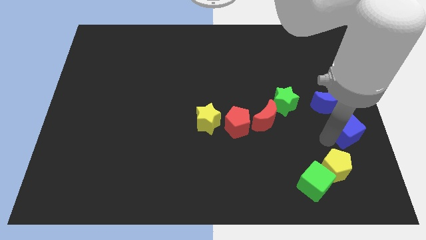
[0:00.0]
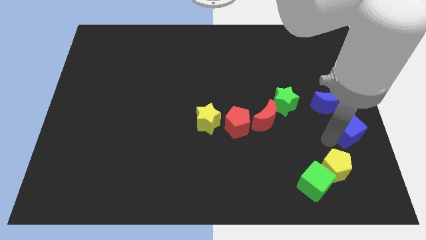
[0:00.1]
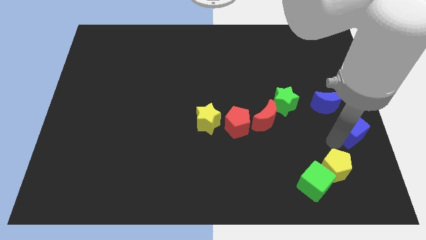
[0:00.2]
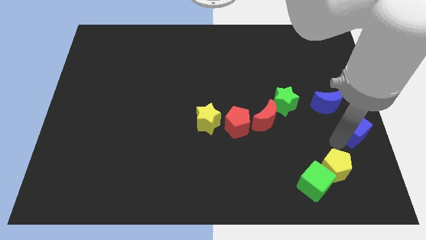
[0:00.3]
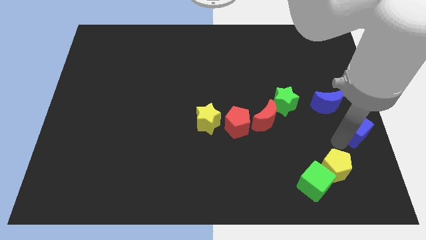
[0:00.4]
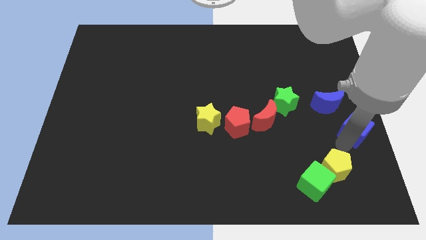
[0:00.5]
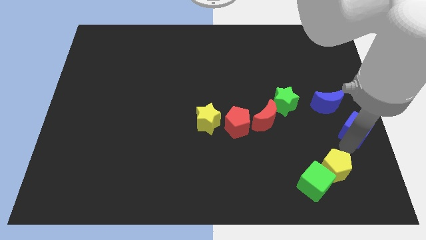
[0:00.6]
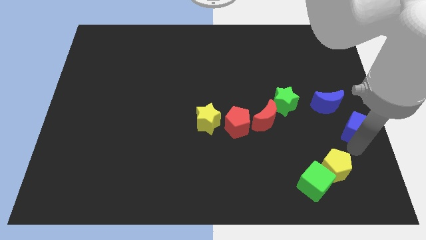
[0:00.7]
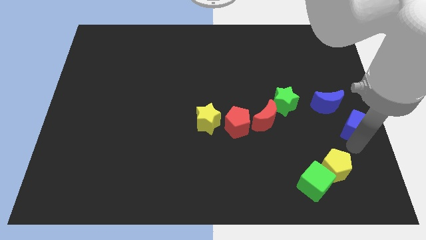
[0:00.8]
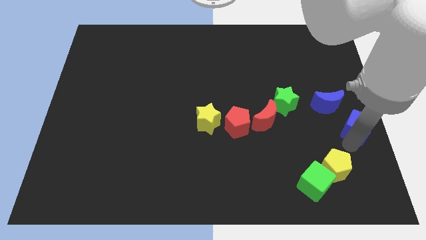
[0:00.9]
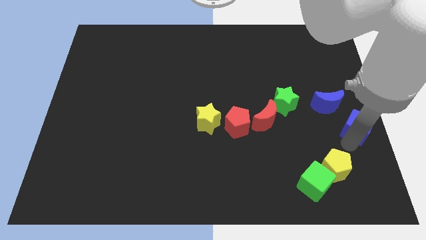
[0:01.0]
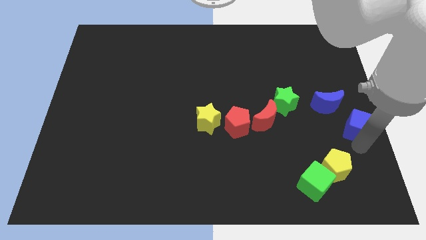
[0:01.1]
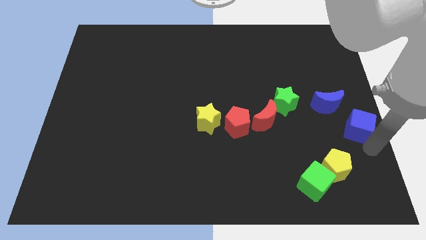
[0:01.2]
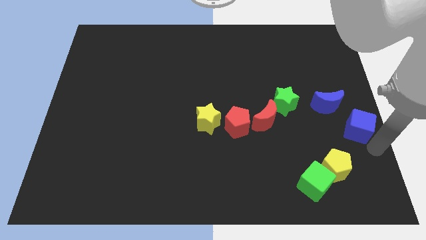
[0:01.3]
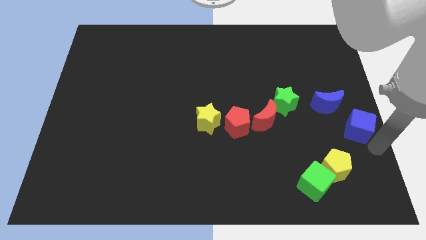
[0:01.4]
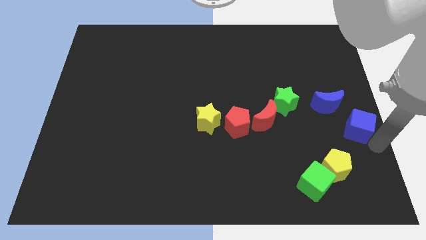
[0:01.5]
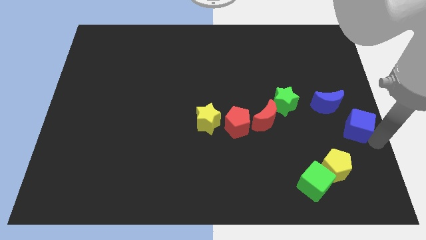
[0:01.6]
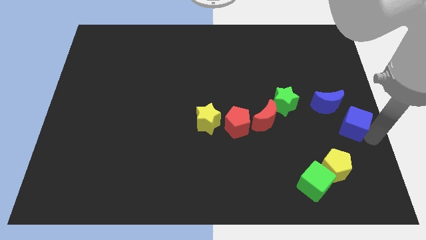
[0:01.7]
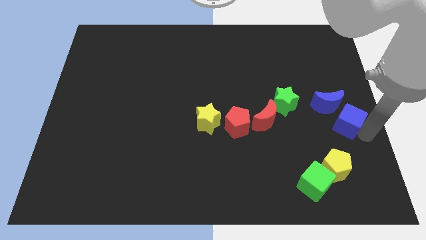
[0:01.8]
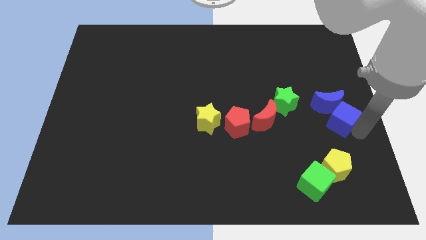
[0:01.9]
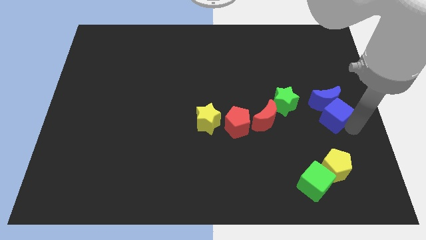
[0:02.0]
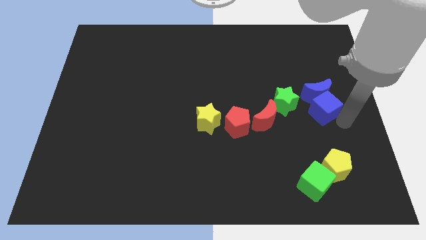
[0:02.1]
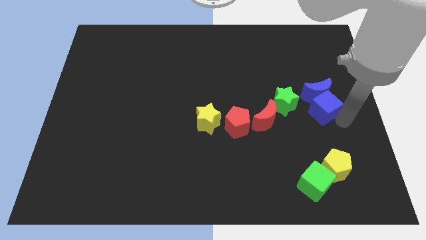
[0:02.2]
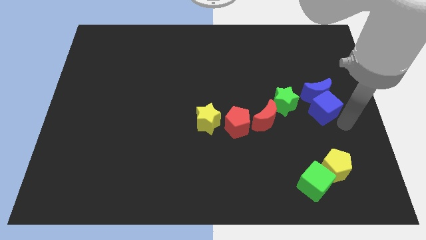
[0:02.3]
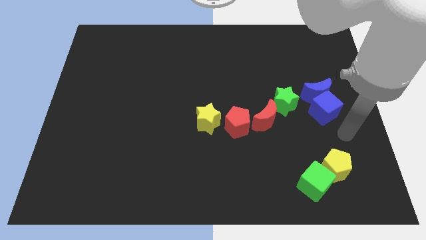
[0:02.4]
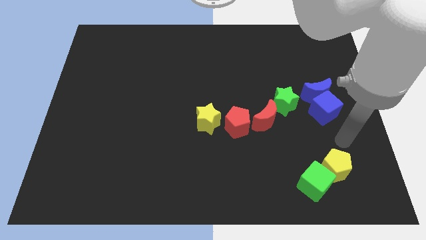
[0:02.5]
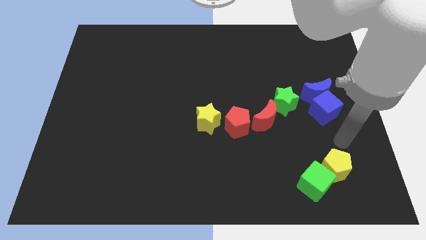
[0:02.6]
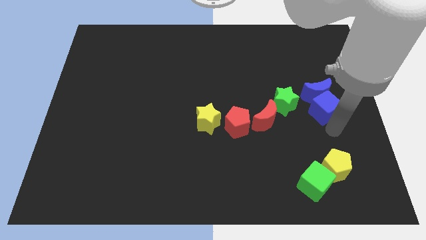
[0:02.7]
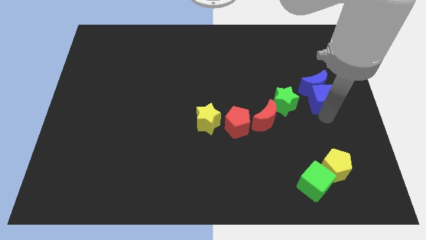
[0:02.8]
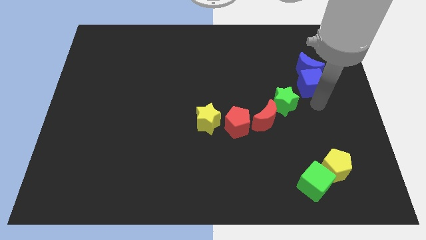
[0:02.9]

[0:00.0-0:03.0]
push blue cube towards blue moon

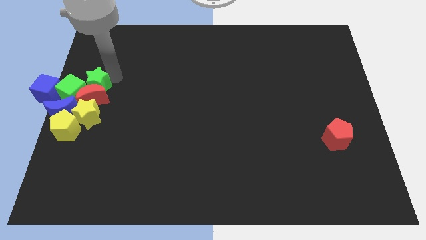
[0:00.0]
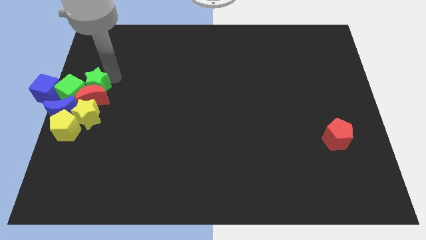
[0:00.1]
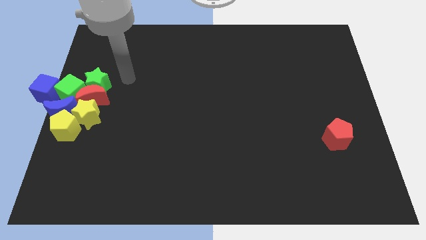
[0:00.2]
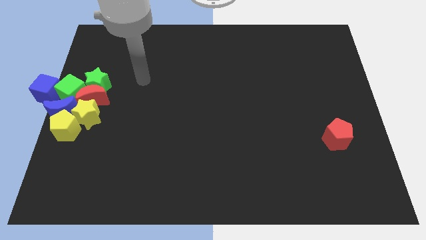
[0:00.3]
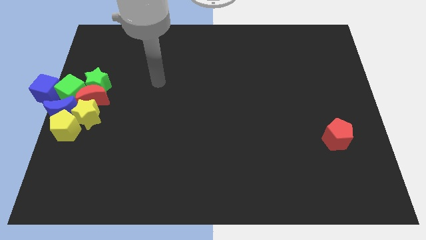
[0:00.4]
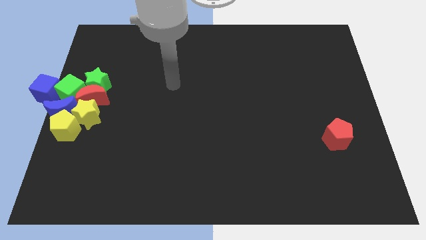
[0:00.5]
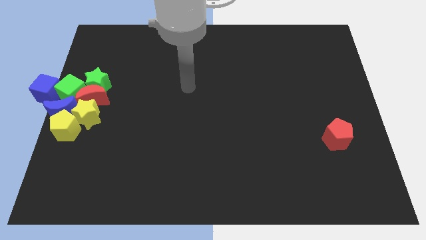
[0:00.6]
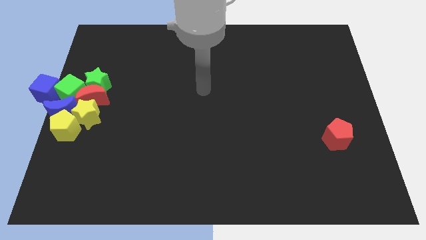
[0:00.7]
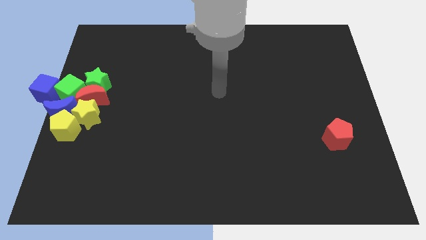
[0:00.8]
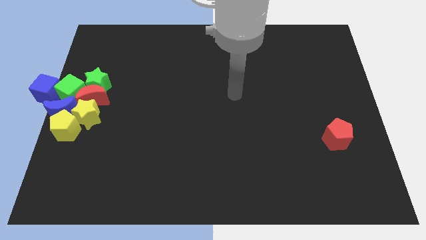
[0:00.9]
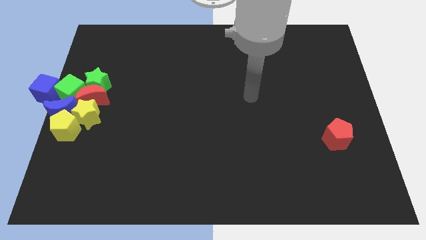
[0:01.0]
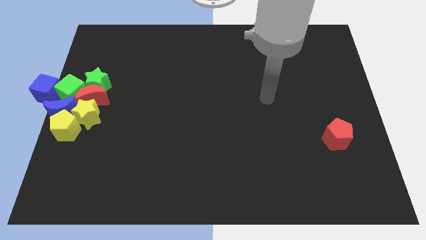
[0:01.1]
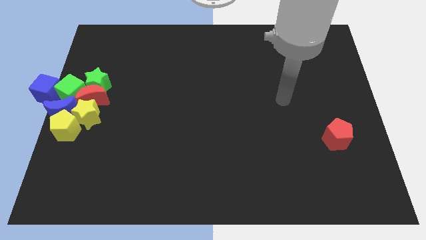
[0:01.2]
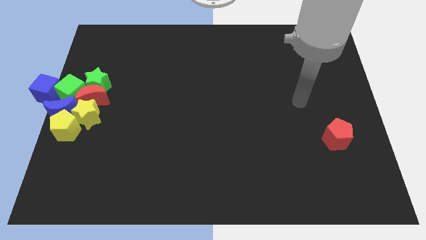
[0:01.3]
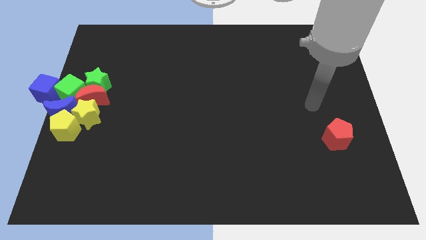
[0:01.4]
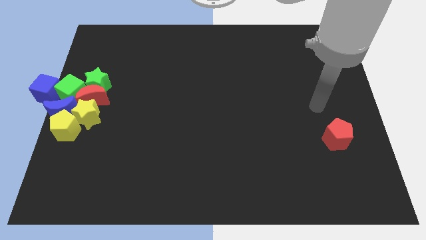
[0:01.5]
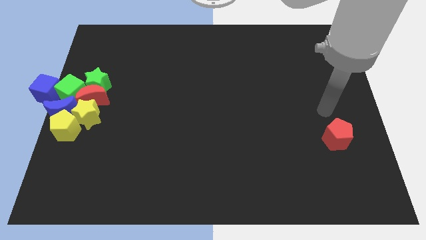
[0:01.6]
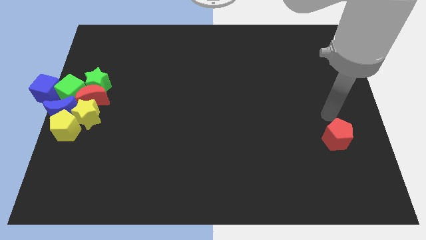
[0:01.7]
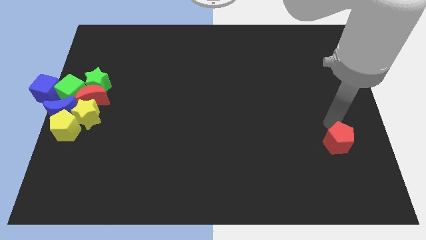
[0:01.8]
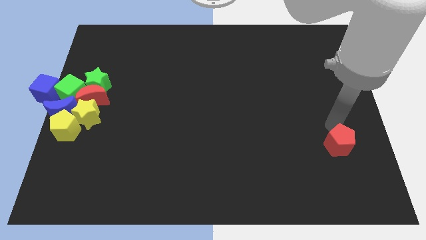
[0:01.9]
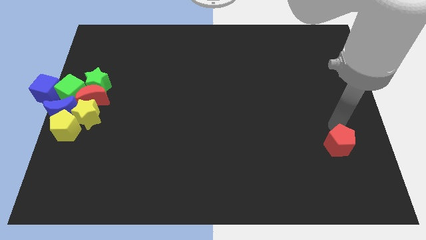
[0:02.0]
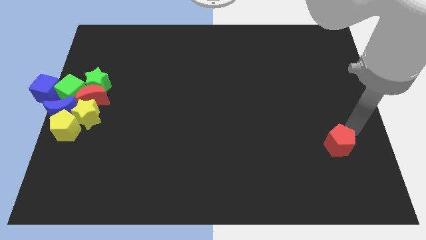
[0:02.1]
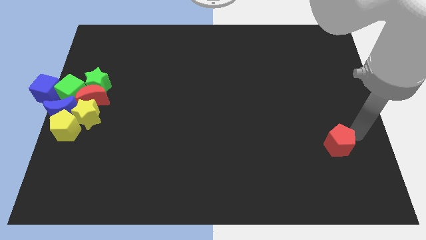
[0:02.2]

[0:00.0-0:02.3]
push the red pentagon towards bottom right corner of the board

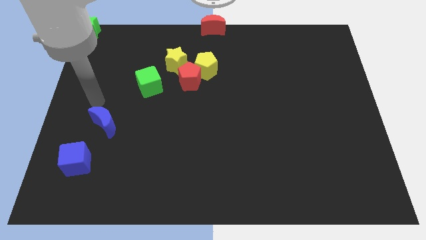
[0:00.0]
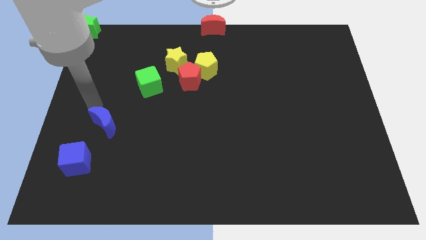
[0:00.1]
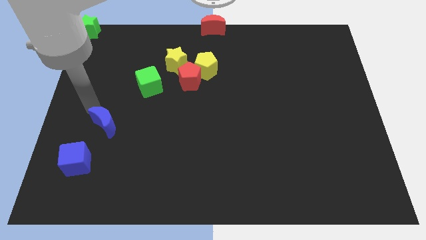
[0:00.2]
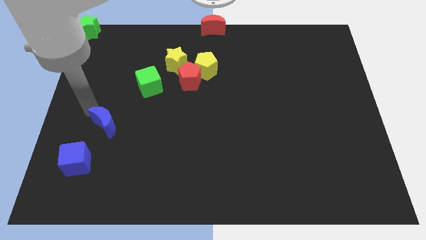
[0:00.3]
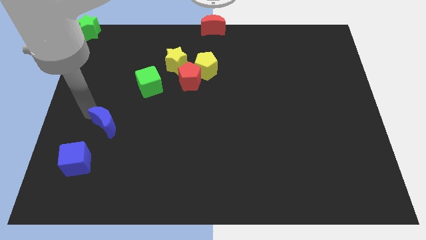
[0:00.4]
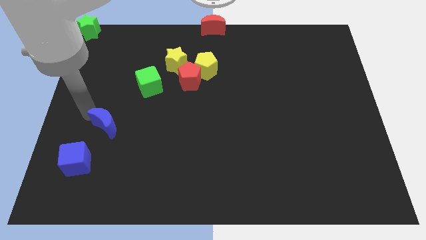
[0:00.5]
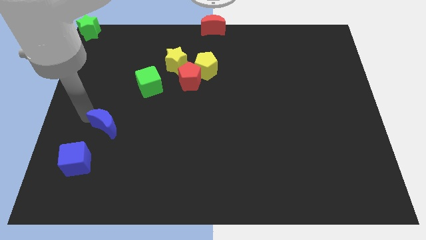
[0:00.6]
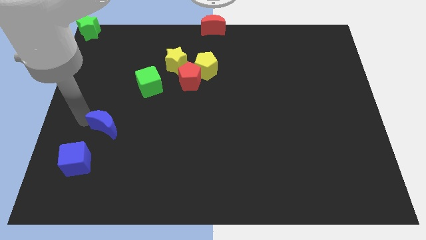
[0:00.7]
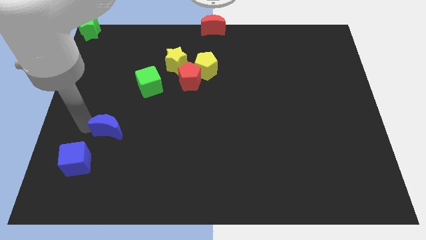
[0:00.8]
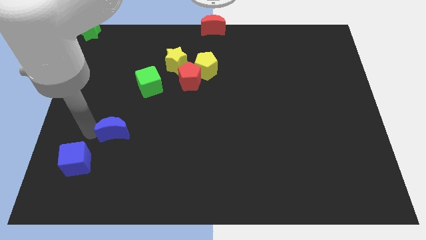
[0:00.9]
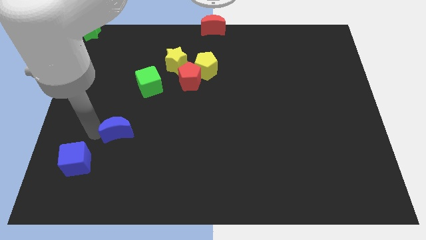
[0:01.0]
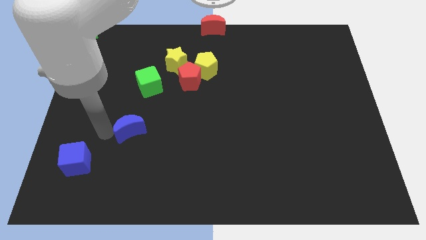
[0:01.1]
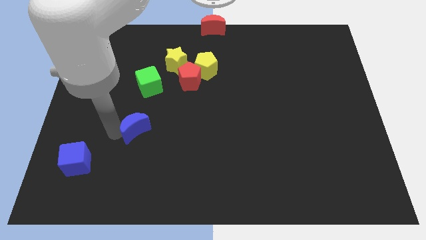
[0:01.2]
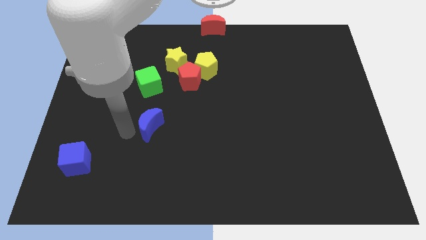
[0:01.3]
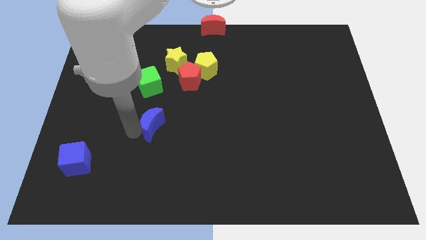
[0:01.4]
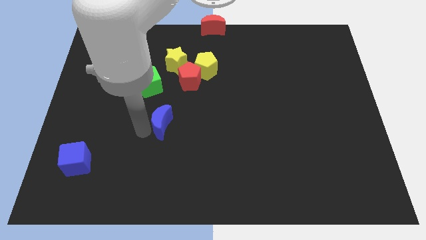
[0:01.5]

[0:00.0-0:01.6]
place the blue moon below the green cube

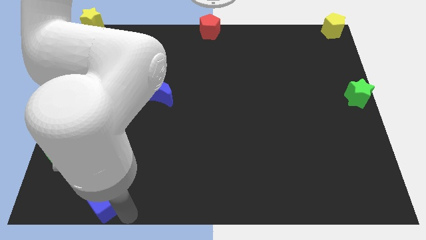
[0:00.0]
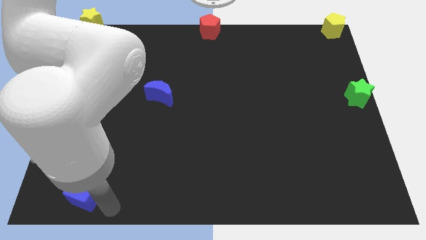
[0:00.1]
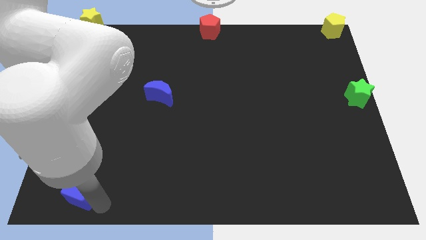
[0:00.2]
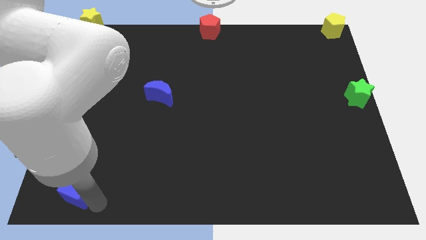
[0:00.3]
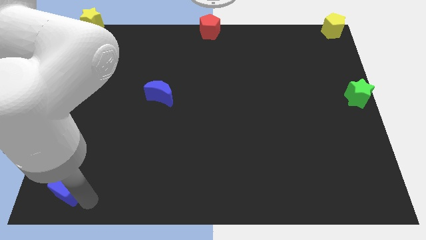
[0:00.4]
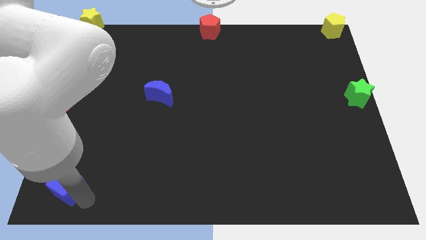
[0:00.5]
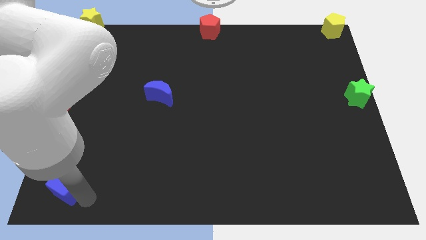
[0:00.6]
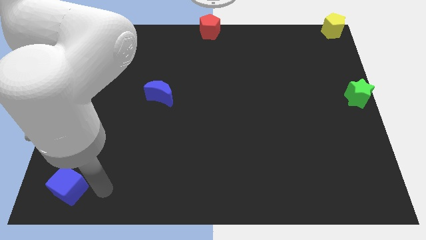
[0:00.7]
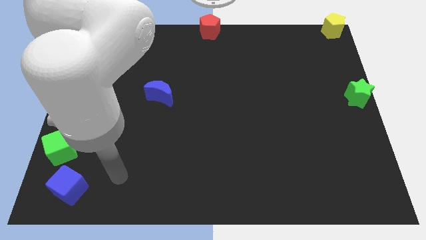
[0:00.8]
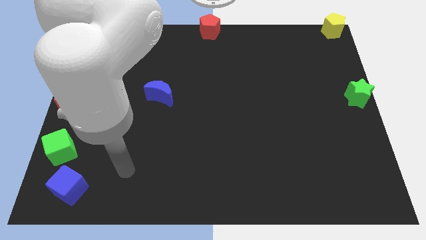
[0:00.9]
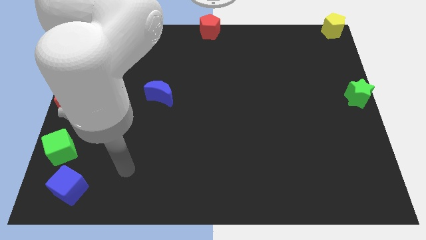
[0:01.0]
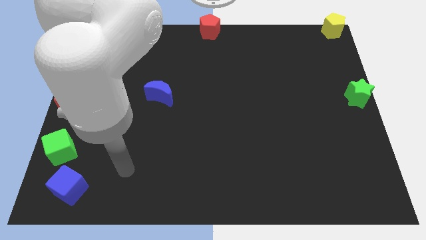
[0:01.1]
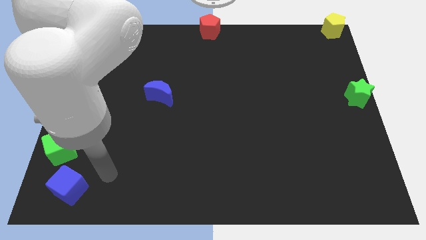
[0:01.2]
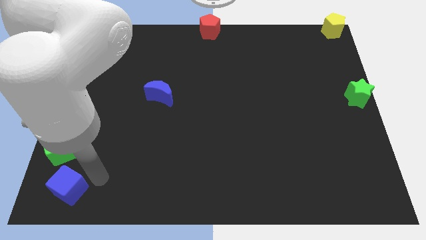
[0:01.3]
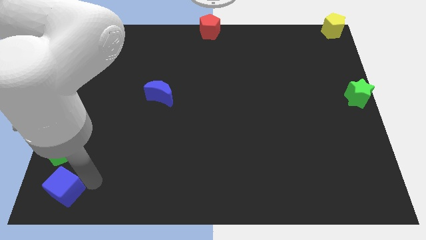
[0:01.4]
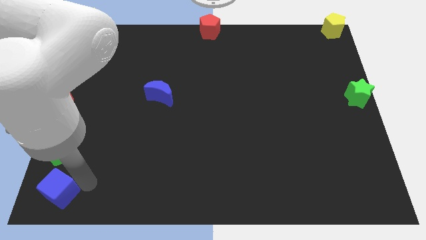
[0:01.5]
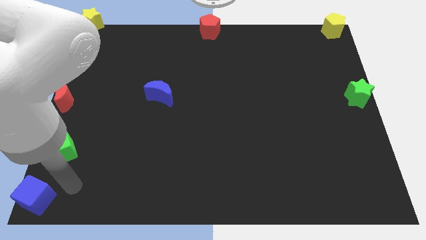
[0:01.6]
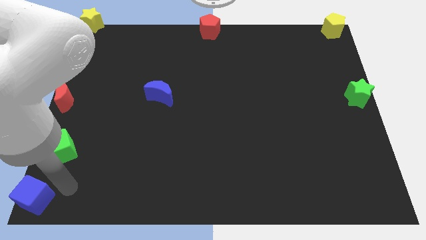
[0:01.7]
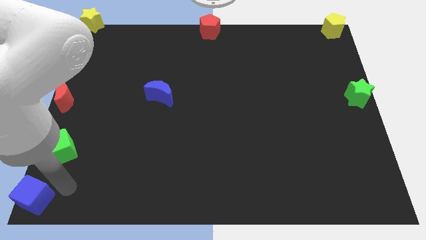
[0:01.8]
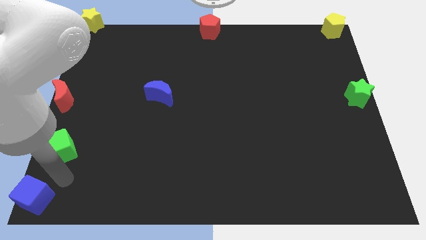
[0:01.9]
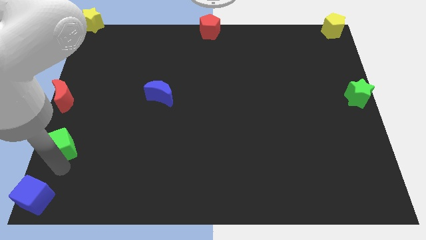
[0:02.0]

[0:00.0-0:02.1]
place blue cube on the bottom left of the board

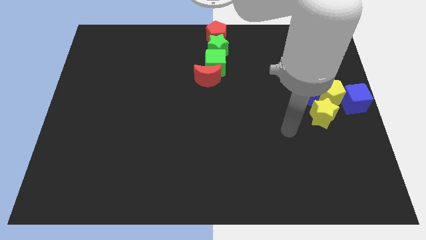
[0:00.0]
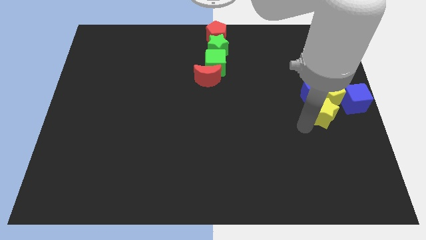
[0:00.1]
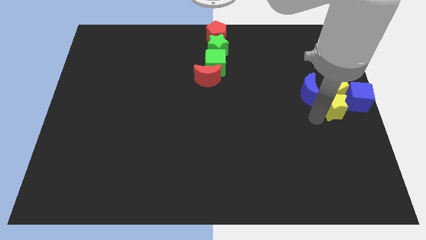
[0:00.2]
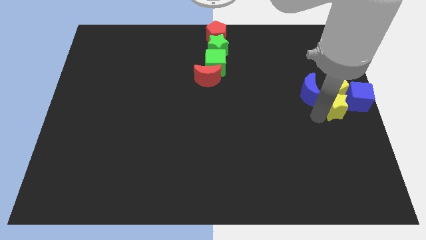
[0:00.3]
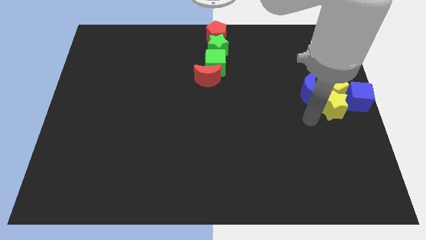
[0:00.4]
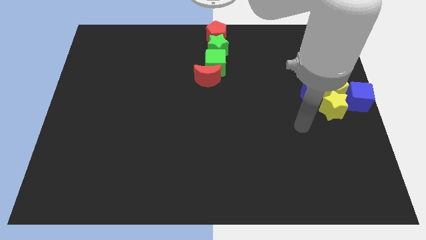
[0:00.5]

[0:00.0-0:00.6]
push yellow star slightly into the group of blocks
